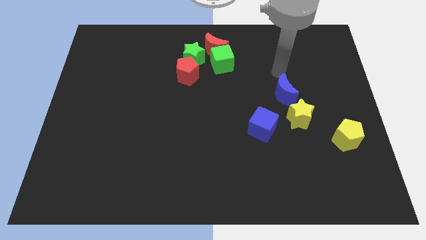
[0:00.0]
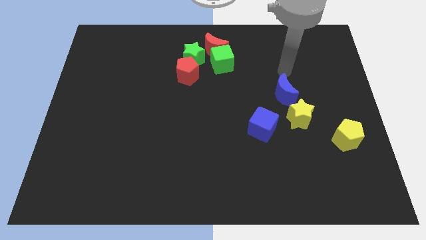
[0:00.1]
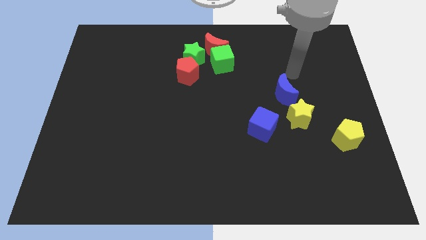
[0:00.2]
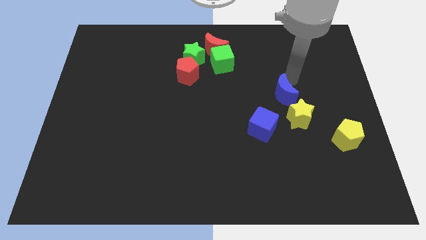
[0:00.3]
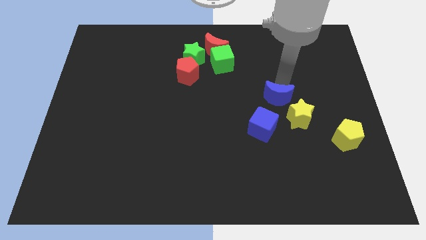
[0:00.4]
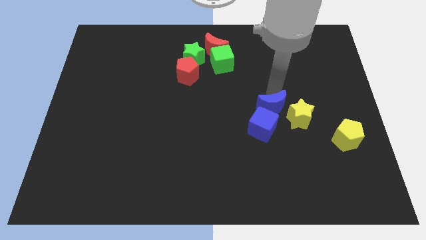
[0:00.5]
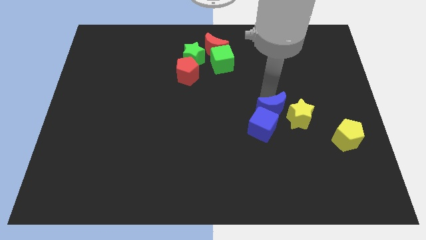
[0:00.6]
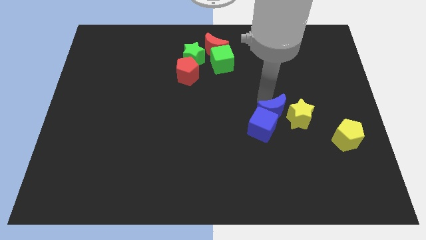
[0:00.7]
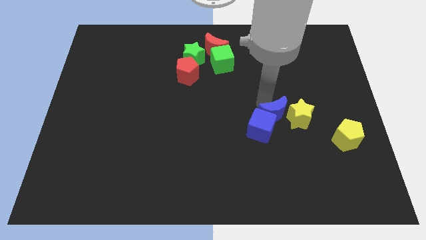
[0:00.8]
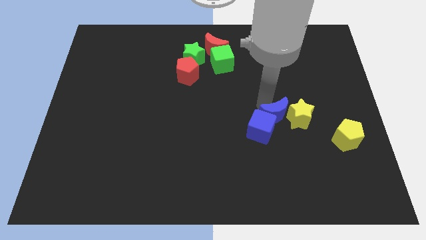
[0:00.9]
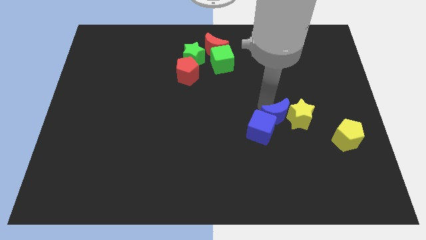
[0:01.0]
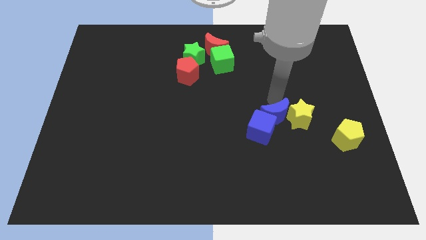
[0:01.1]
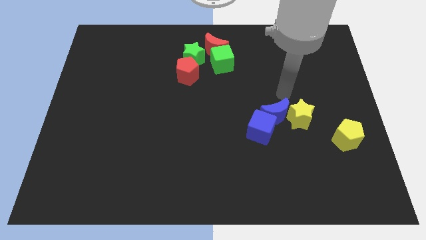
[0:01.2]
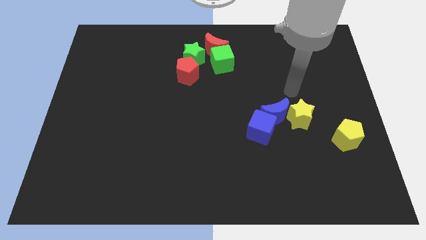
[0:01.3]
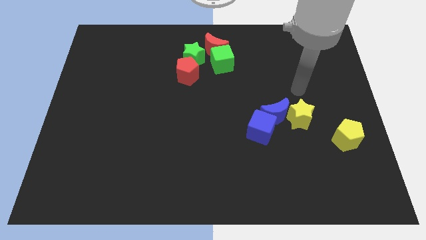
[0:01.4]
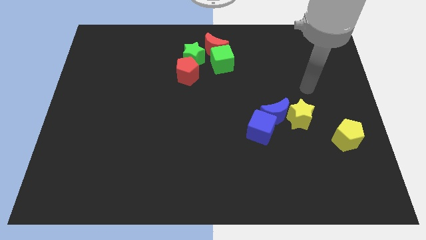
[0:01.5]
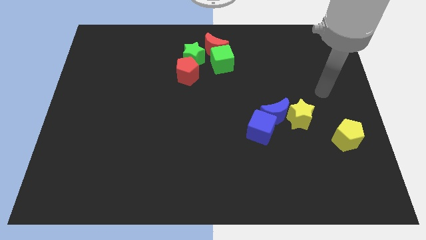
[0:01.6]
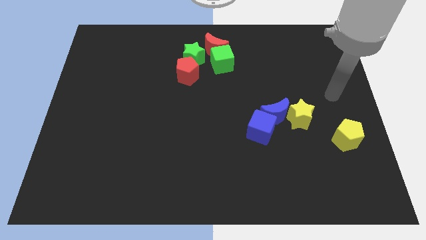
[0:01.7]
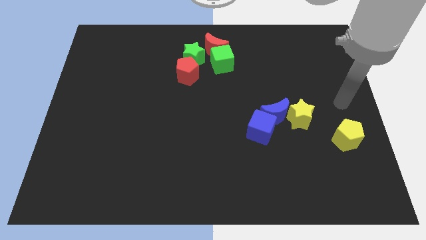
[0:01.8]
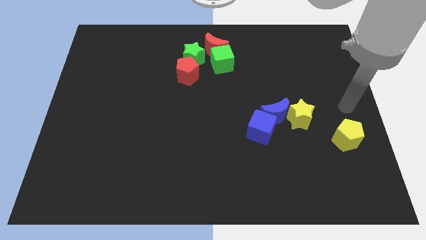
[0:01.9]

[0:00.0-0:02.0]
push blue moon into blue cube

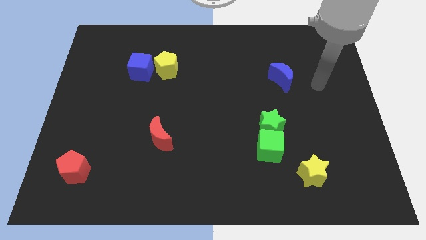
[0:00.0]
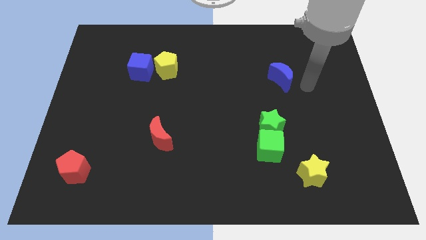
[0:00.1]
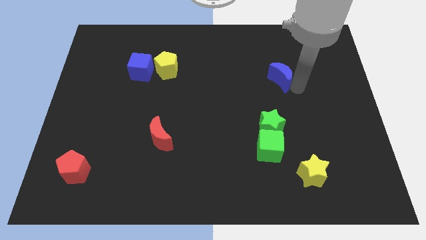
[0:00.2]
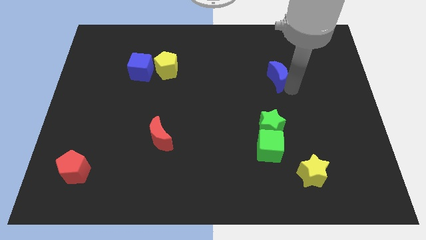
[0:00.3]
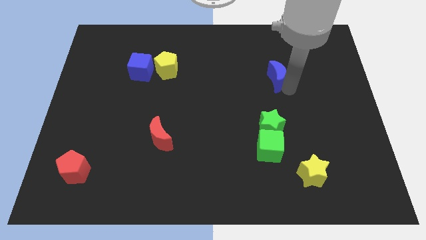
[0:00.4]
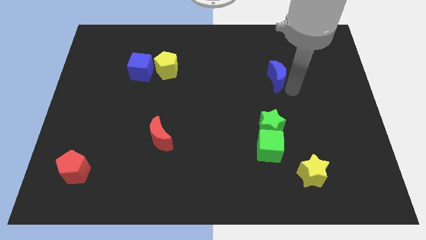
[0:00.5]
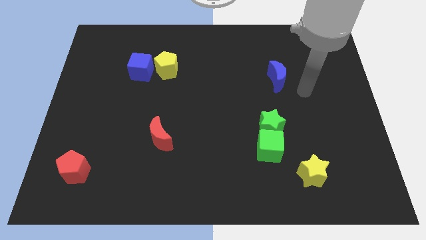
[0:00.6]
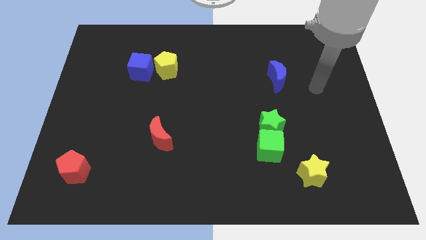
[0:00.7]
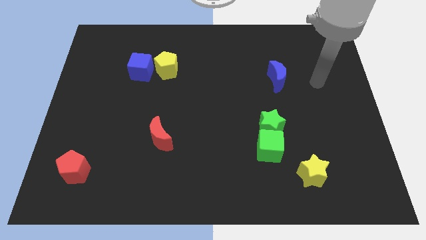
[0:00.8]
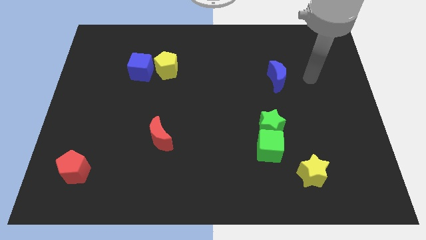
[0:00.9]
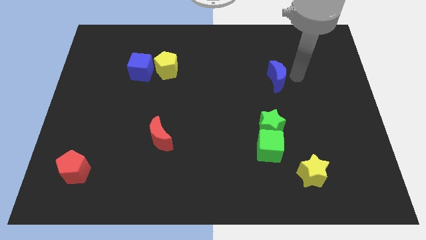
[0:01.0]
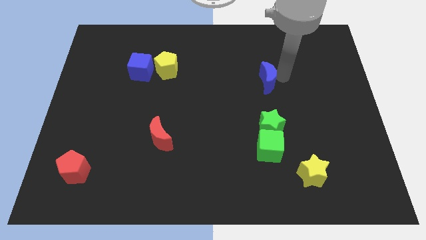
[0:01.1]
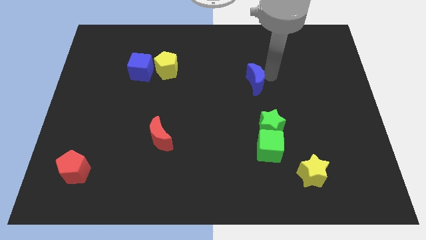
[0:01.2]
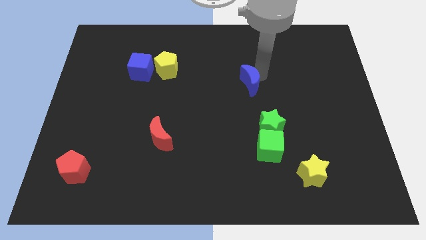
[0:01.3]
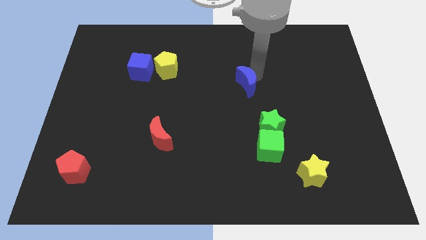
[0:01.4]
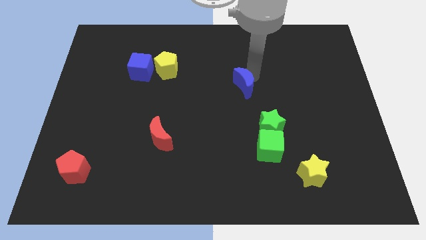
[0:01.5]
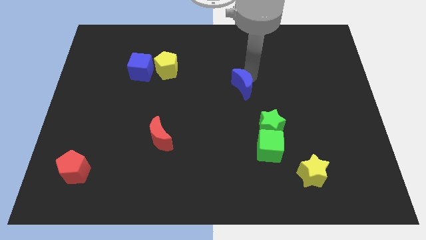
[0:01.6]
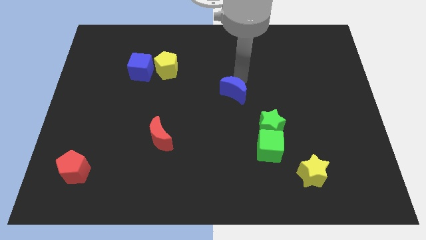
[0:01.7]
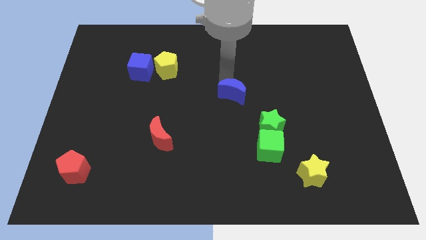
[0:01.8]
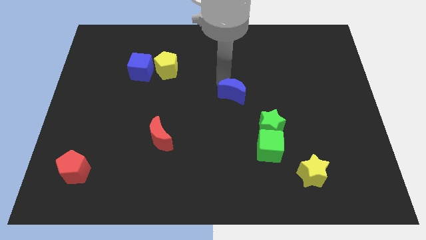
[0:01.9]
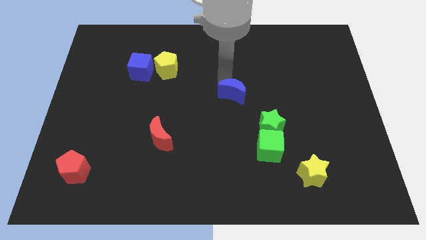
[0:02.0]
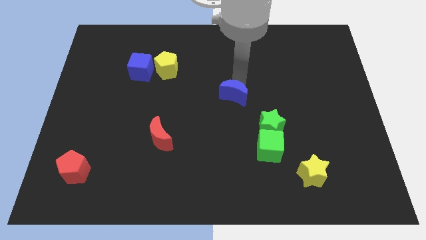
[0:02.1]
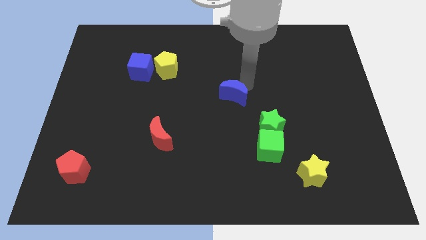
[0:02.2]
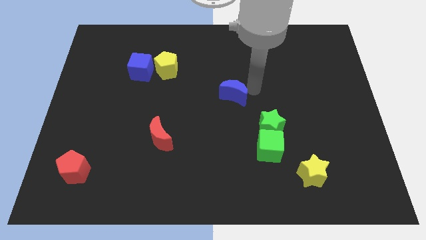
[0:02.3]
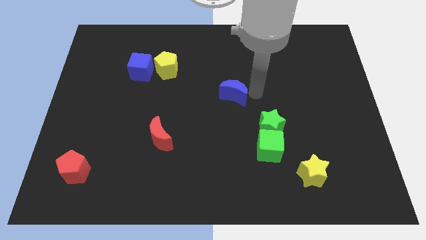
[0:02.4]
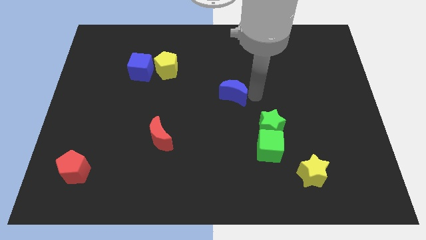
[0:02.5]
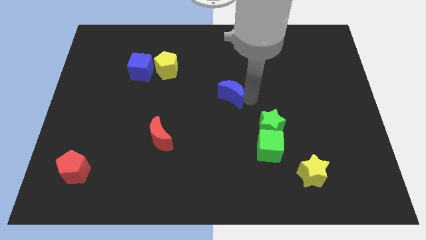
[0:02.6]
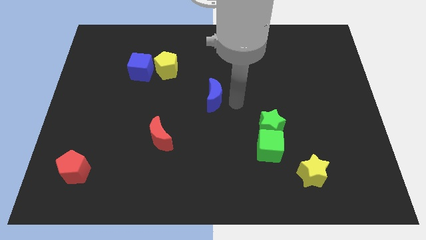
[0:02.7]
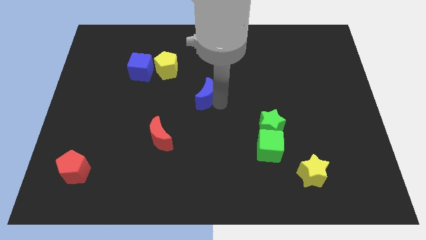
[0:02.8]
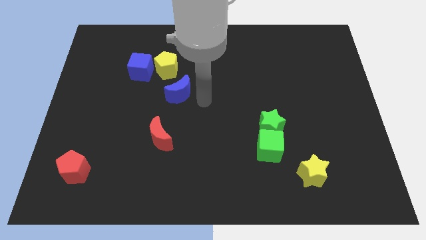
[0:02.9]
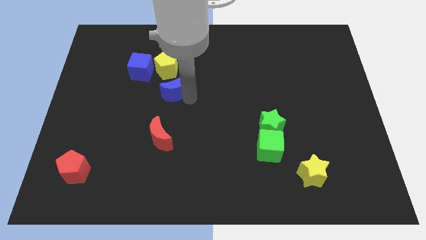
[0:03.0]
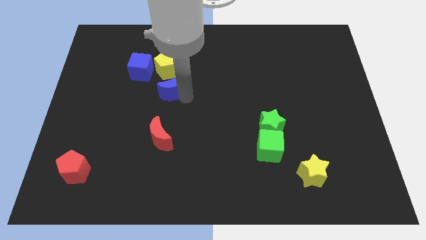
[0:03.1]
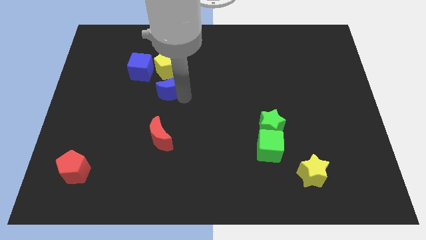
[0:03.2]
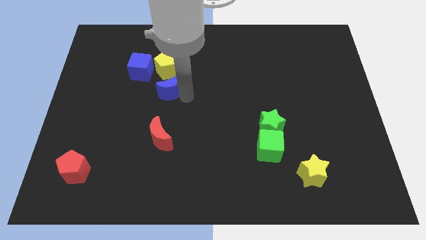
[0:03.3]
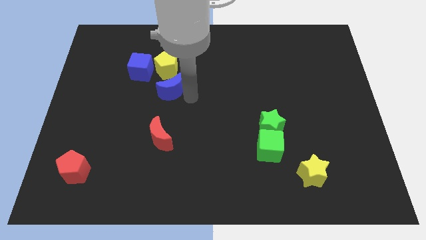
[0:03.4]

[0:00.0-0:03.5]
put the blue moon to the bottom side of the yellow pentagon

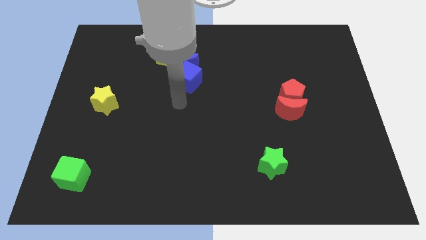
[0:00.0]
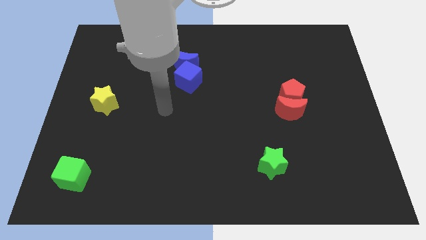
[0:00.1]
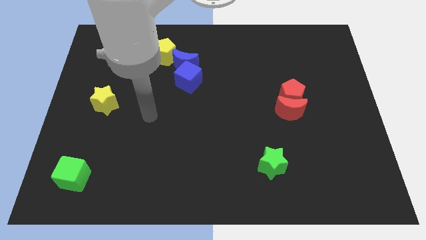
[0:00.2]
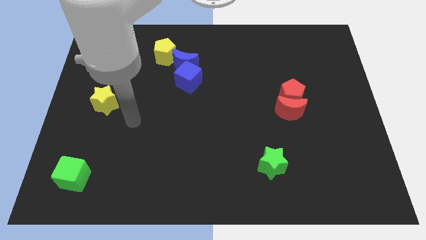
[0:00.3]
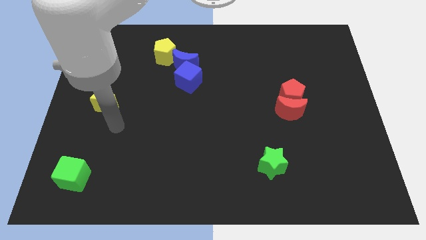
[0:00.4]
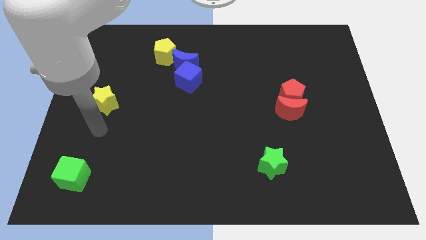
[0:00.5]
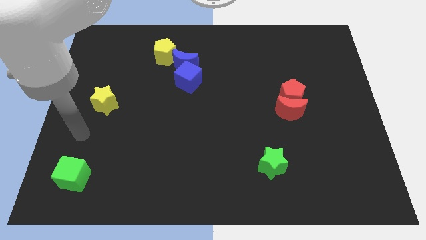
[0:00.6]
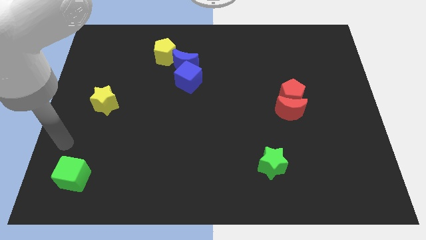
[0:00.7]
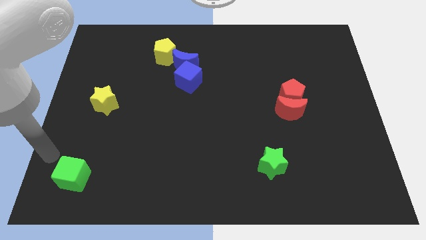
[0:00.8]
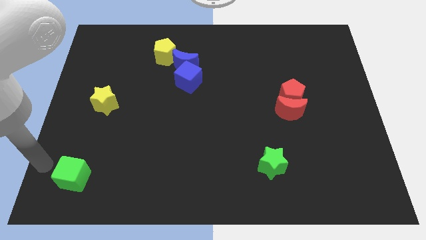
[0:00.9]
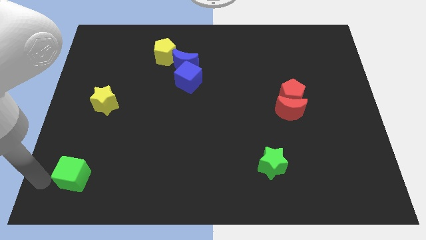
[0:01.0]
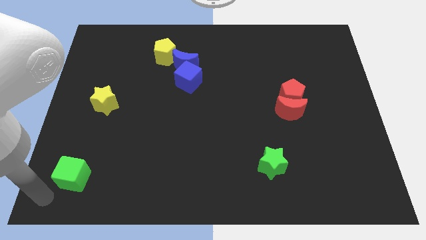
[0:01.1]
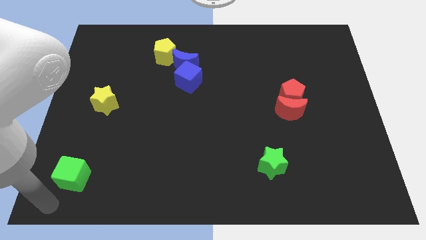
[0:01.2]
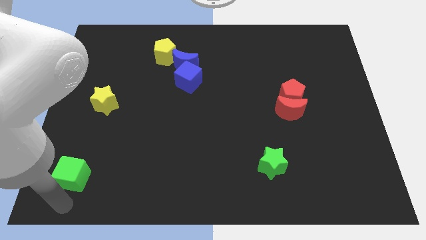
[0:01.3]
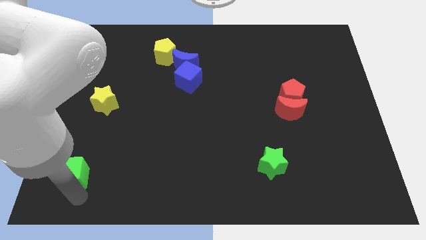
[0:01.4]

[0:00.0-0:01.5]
move your arm to the bottom left of the board

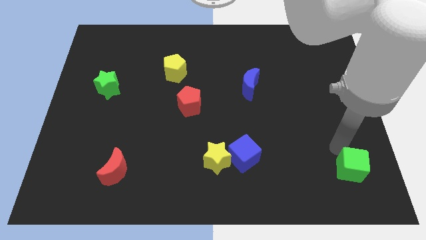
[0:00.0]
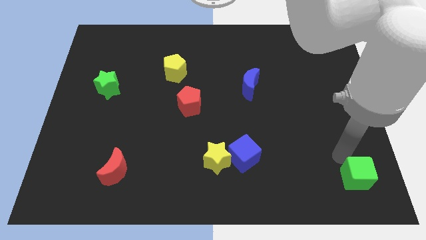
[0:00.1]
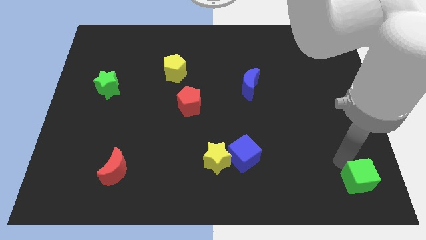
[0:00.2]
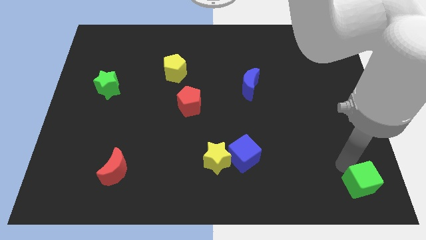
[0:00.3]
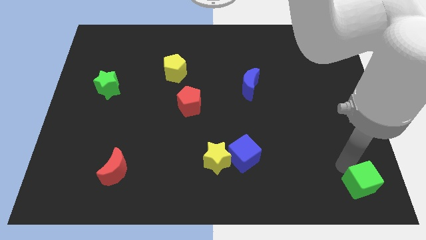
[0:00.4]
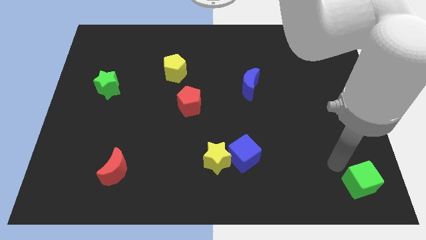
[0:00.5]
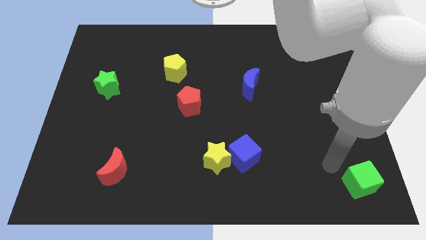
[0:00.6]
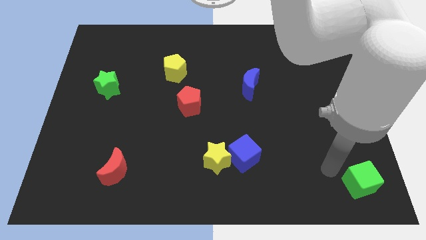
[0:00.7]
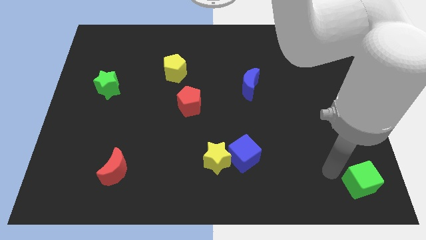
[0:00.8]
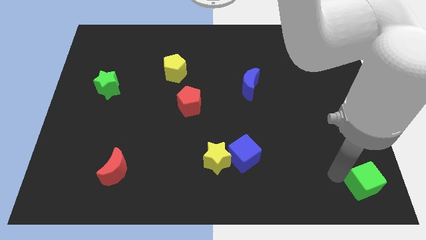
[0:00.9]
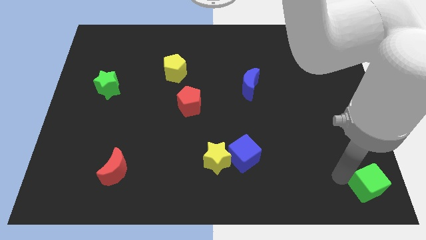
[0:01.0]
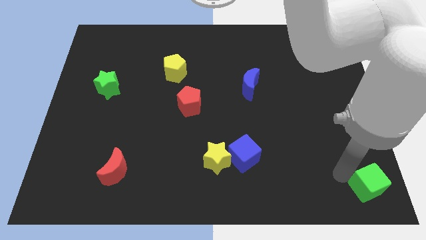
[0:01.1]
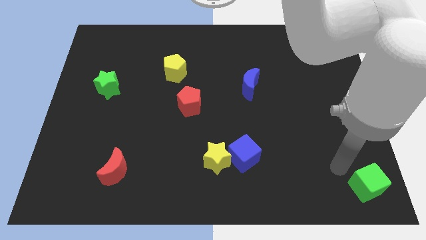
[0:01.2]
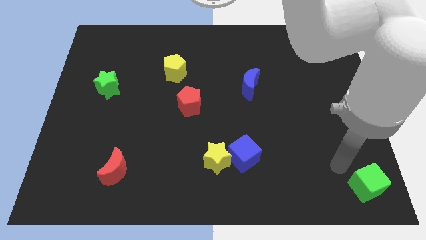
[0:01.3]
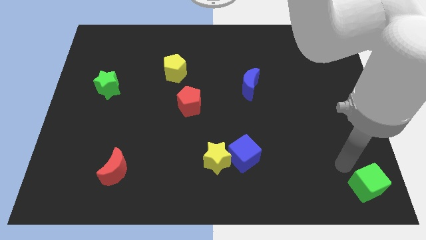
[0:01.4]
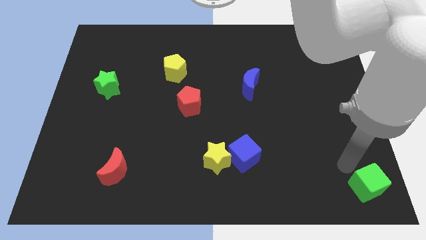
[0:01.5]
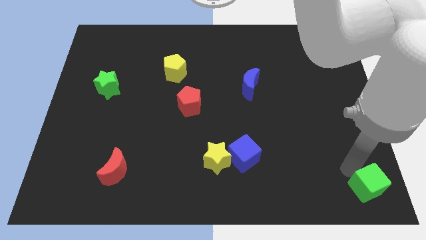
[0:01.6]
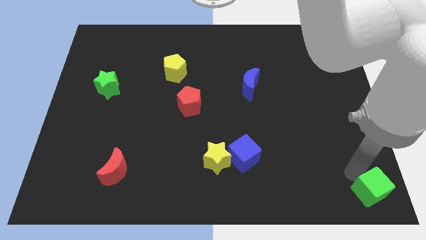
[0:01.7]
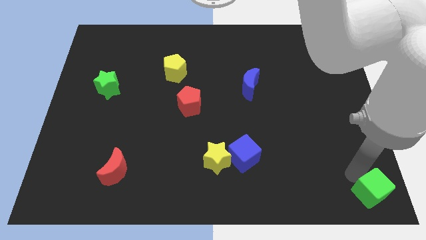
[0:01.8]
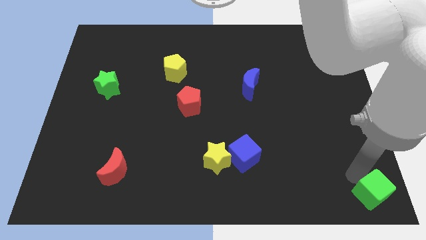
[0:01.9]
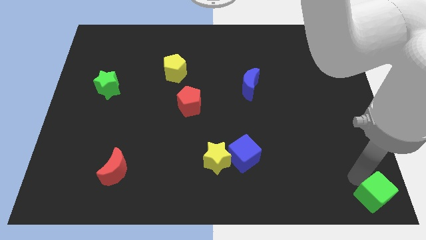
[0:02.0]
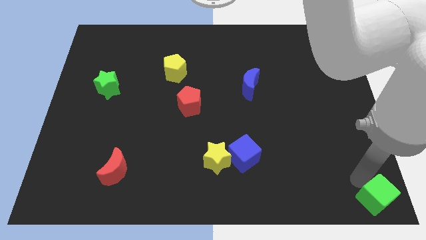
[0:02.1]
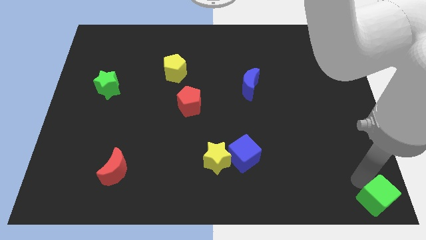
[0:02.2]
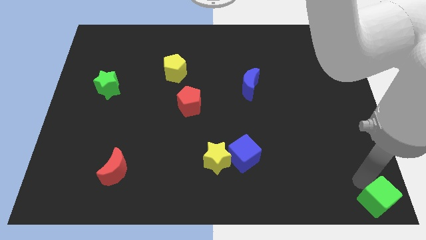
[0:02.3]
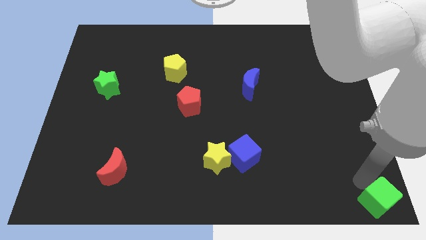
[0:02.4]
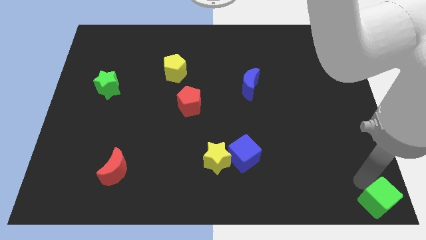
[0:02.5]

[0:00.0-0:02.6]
move the green cube slightly towards the bottom right corner of the board
